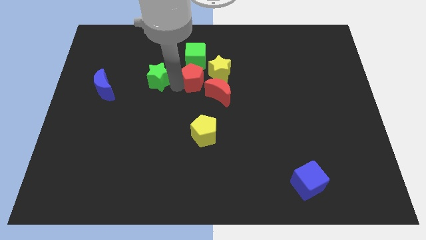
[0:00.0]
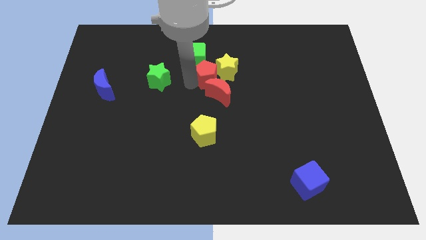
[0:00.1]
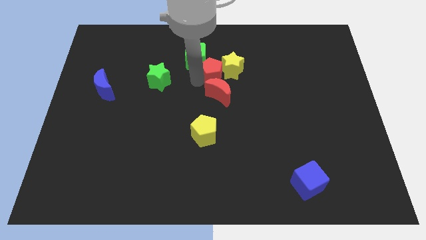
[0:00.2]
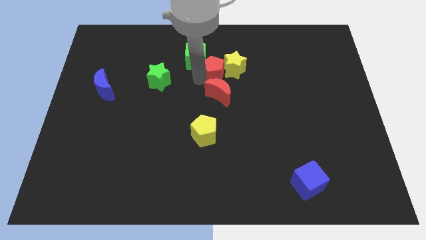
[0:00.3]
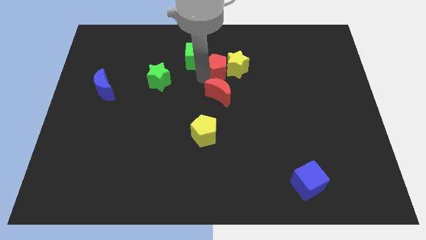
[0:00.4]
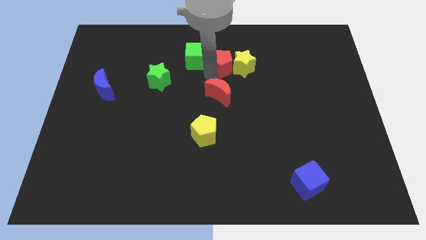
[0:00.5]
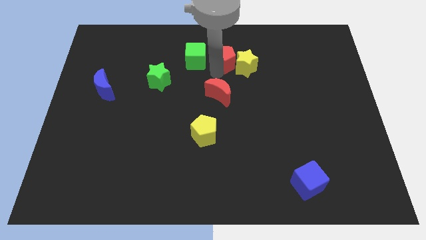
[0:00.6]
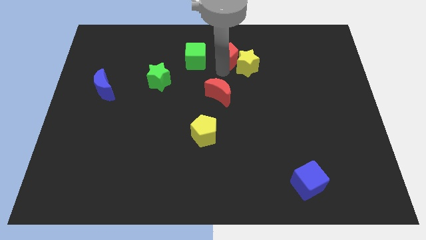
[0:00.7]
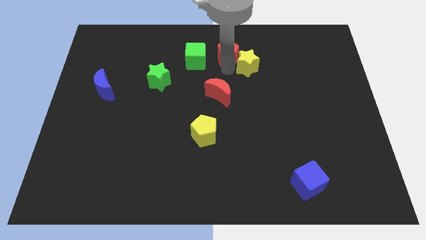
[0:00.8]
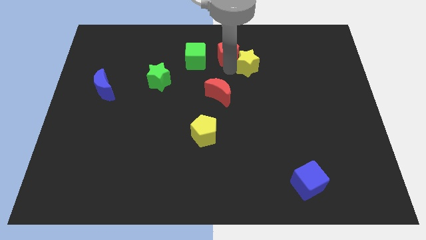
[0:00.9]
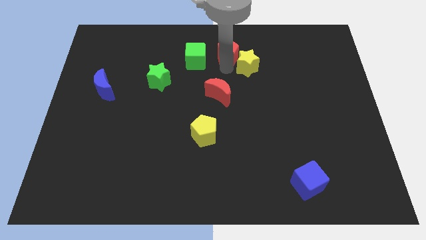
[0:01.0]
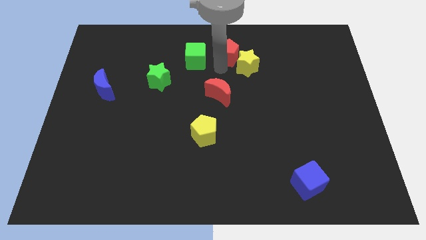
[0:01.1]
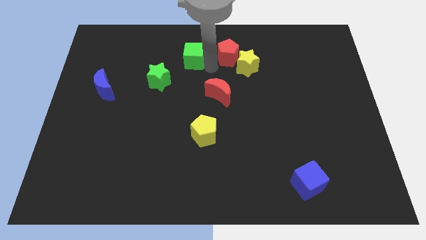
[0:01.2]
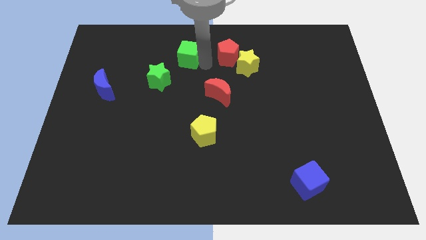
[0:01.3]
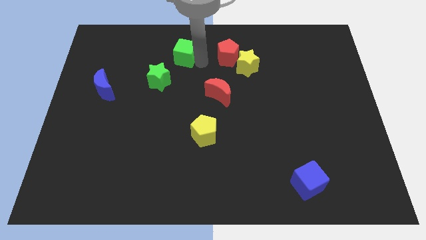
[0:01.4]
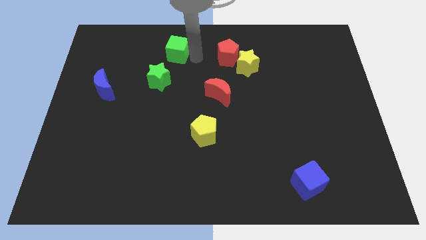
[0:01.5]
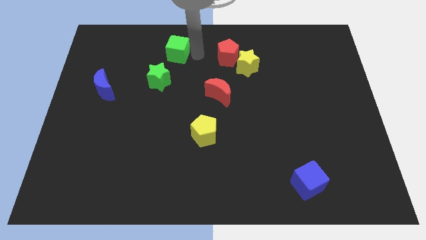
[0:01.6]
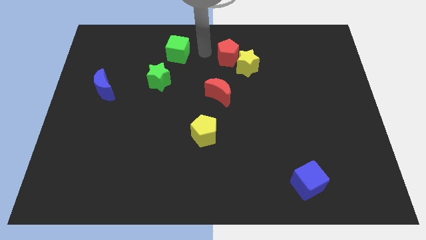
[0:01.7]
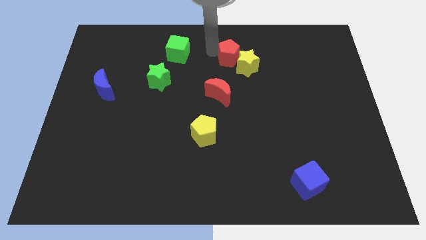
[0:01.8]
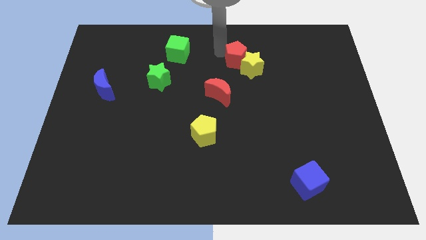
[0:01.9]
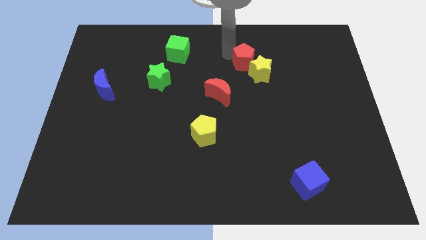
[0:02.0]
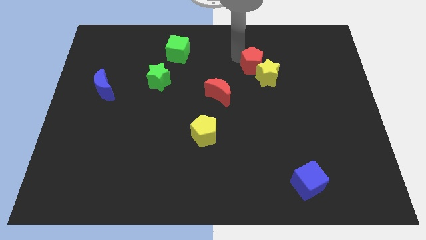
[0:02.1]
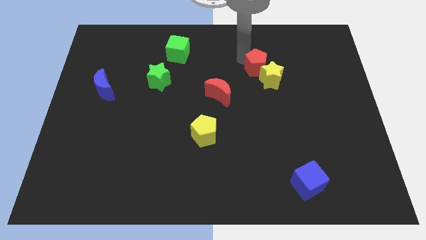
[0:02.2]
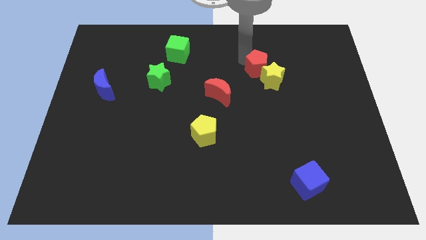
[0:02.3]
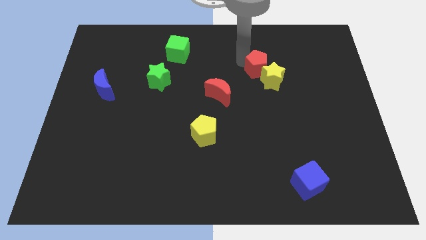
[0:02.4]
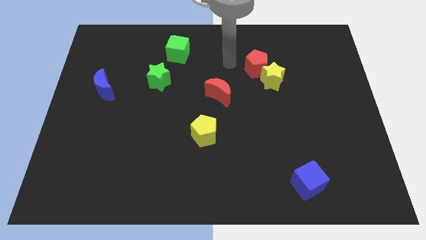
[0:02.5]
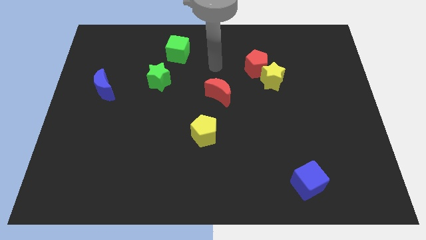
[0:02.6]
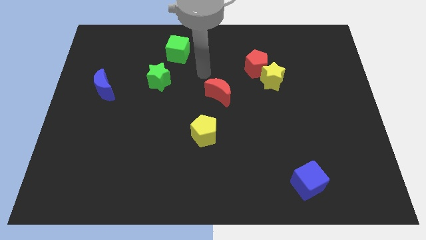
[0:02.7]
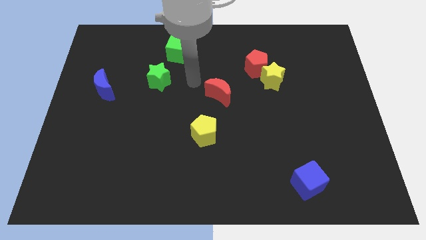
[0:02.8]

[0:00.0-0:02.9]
push the red pentagon and the yellow star towards the right

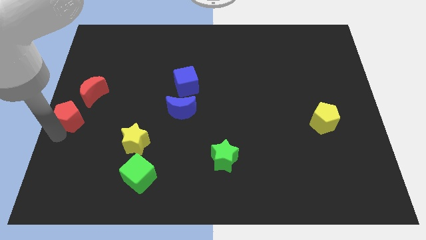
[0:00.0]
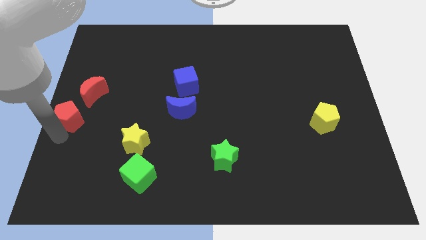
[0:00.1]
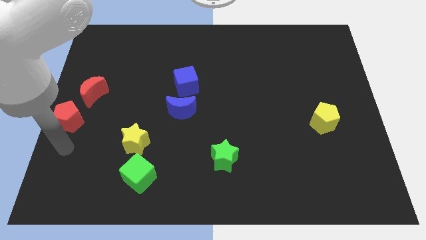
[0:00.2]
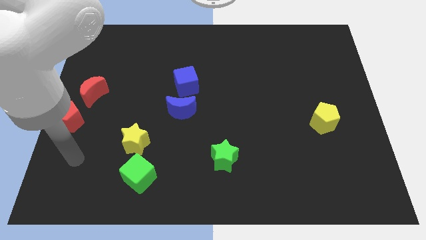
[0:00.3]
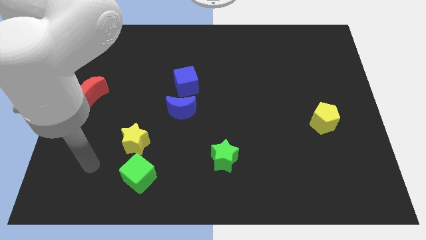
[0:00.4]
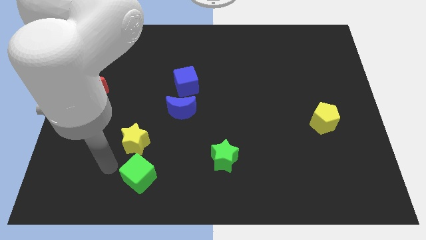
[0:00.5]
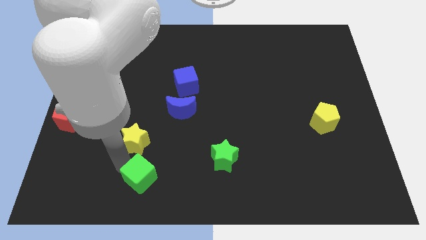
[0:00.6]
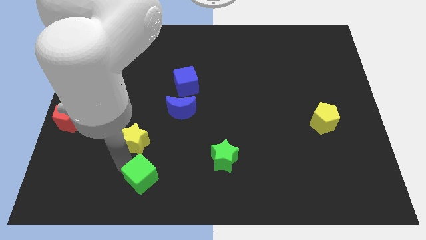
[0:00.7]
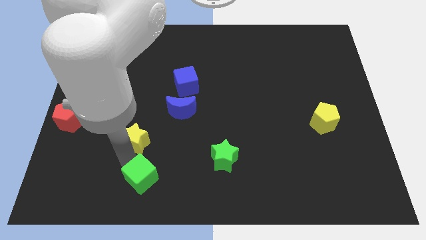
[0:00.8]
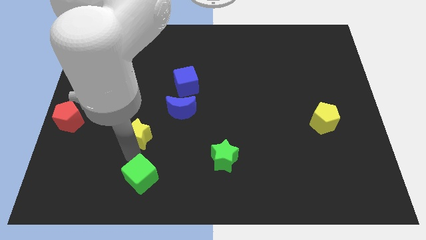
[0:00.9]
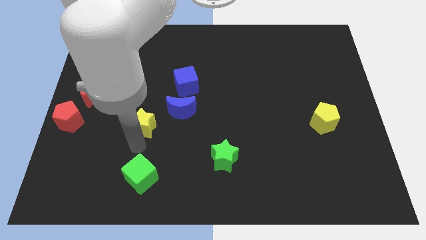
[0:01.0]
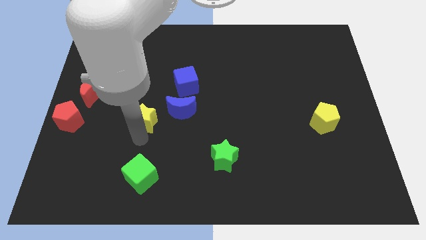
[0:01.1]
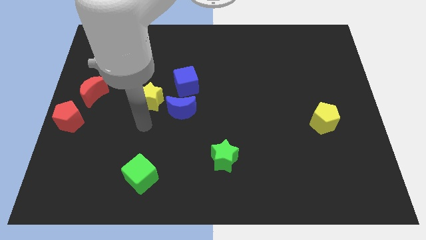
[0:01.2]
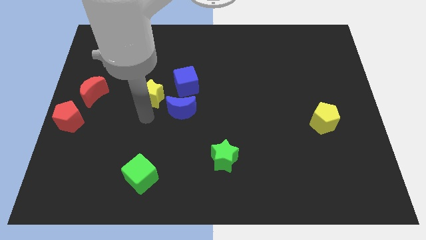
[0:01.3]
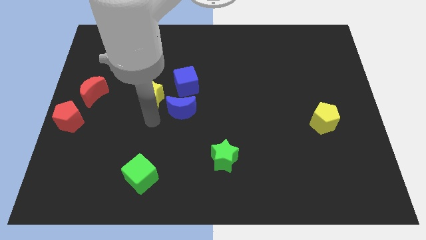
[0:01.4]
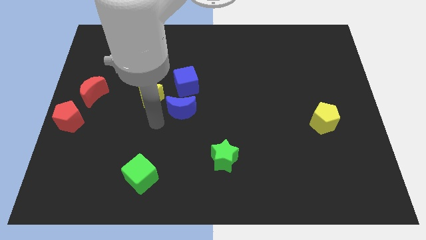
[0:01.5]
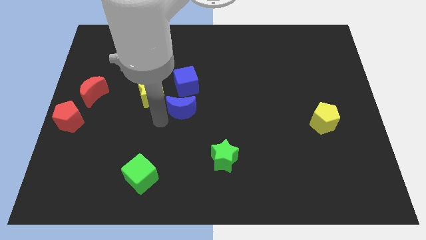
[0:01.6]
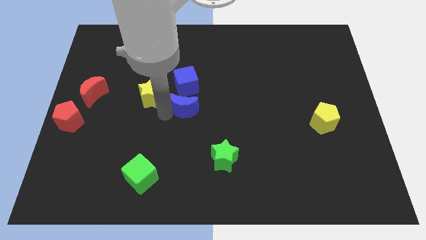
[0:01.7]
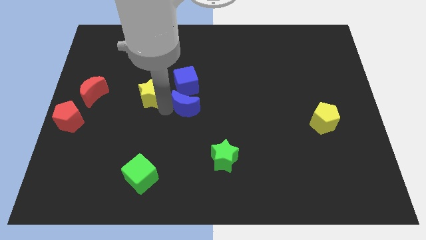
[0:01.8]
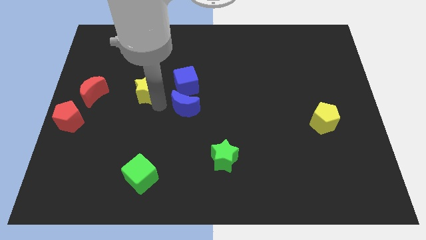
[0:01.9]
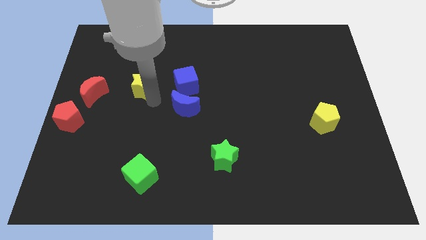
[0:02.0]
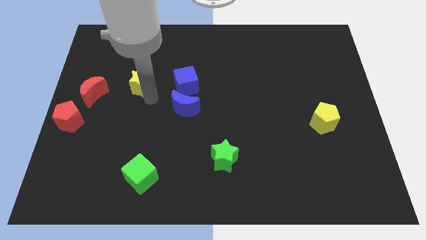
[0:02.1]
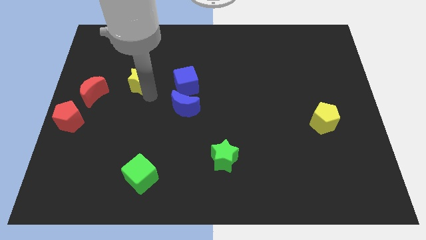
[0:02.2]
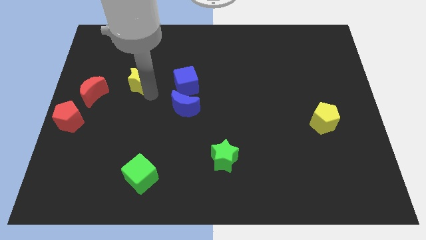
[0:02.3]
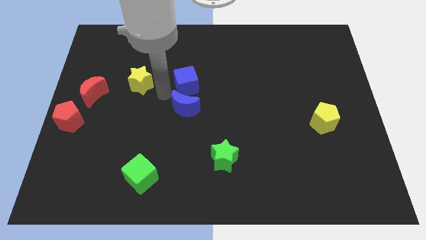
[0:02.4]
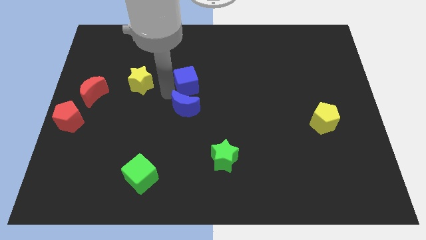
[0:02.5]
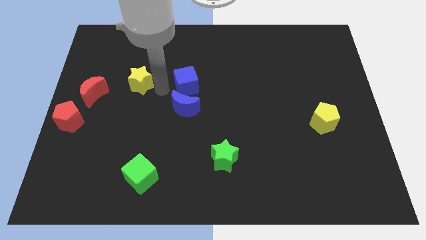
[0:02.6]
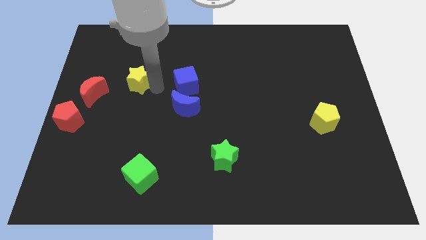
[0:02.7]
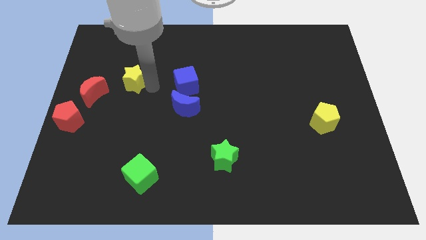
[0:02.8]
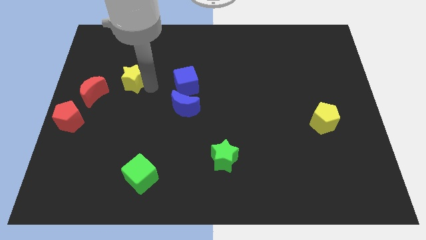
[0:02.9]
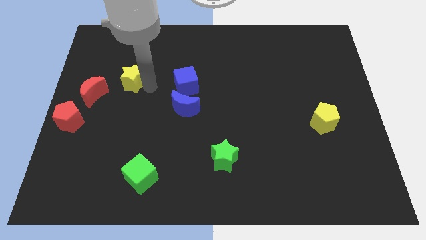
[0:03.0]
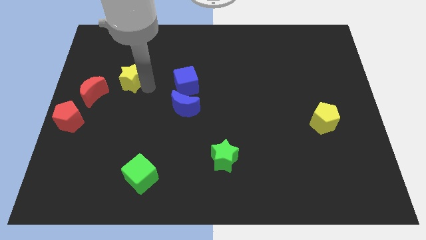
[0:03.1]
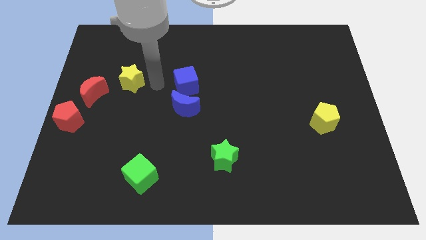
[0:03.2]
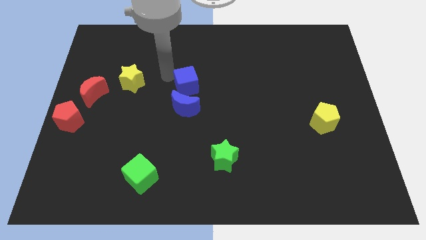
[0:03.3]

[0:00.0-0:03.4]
push yellow star towards up

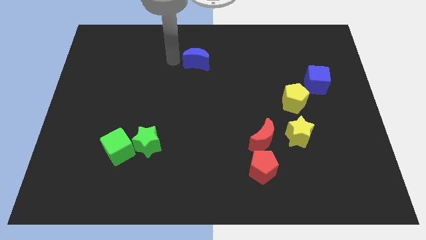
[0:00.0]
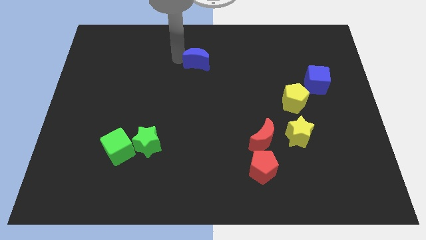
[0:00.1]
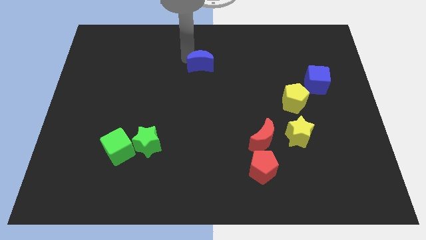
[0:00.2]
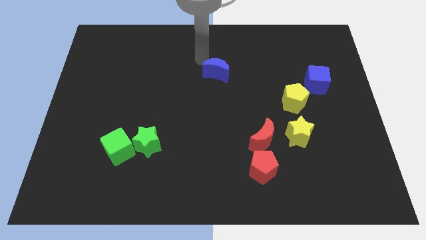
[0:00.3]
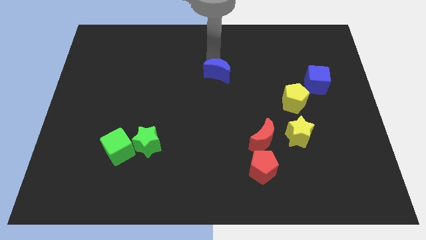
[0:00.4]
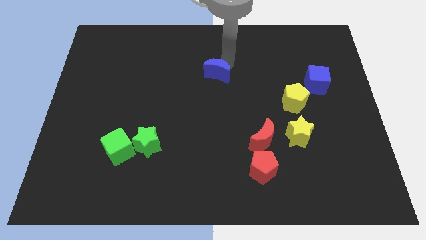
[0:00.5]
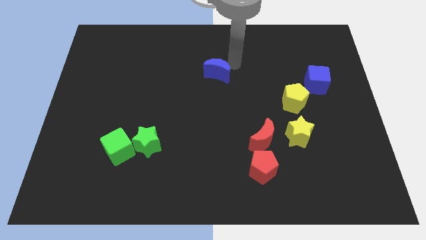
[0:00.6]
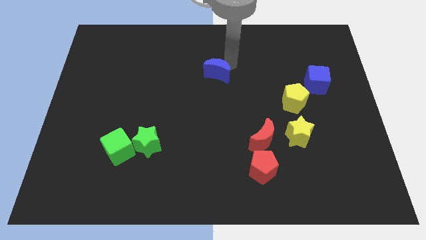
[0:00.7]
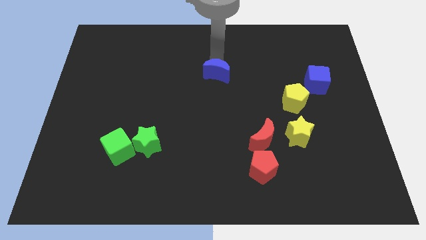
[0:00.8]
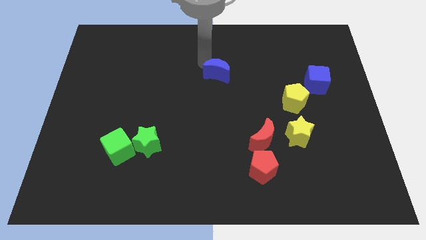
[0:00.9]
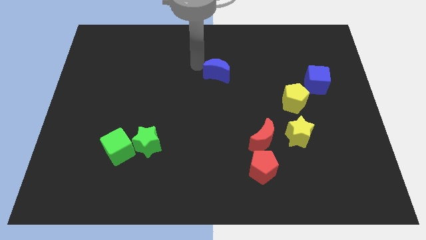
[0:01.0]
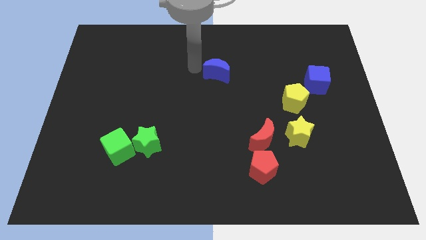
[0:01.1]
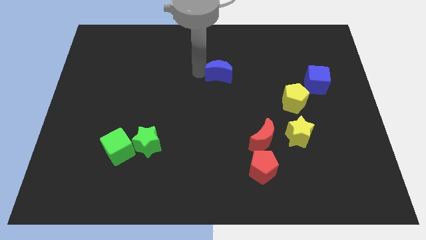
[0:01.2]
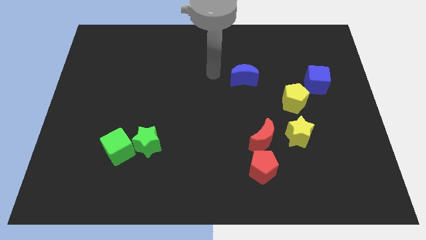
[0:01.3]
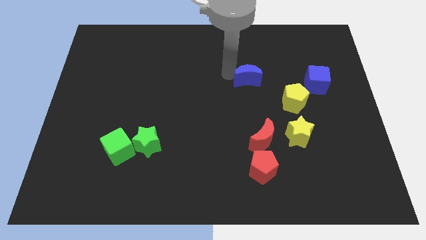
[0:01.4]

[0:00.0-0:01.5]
move the blue crescent towards blue square

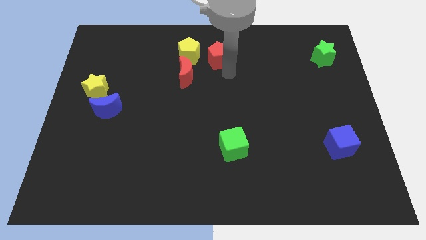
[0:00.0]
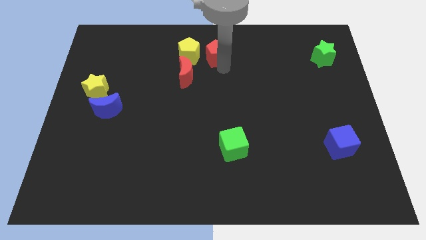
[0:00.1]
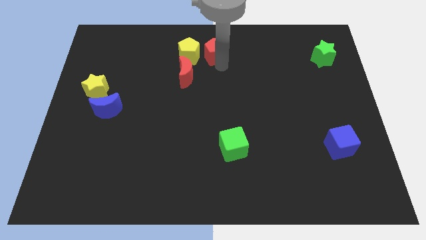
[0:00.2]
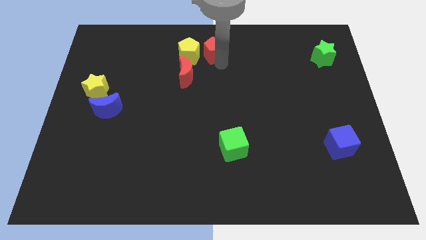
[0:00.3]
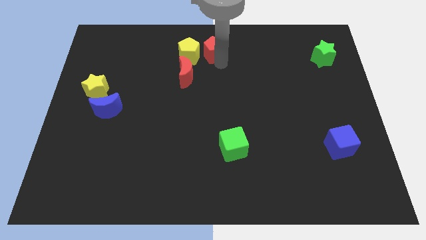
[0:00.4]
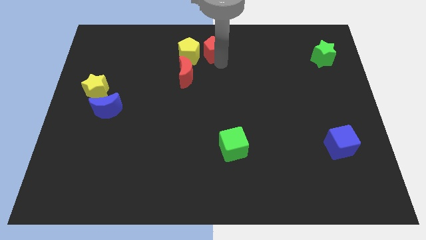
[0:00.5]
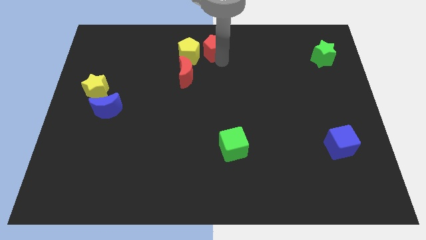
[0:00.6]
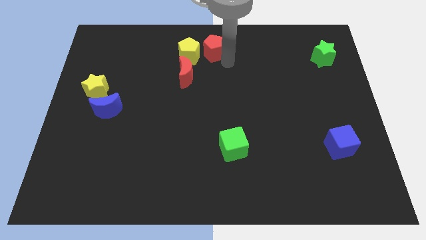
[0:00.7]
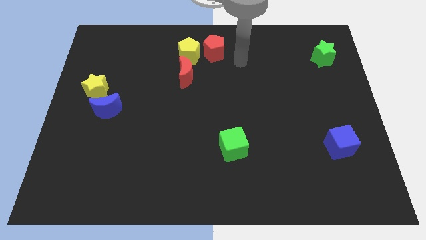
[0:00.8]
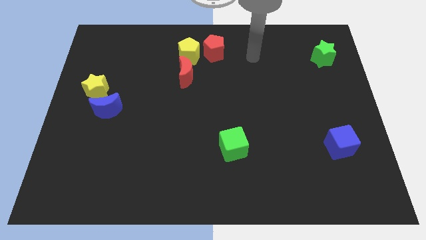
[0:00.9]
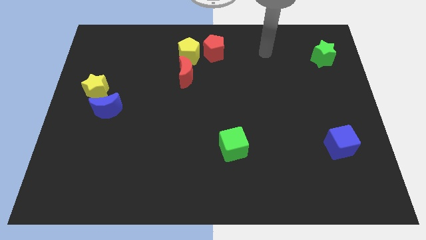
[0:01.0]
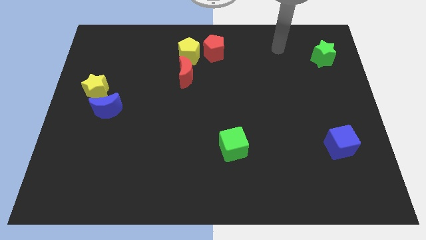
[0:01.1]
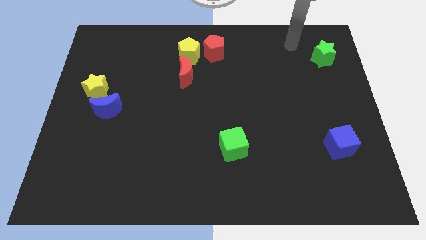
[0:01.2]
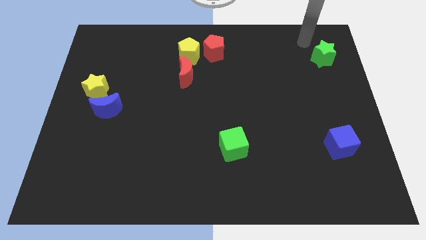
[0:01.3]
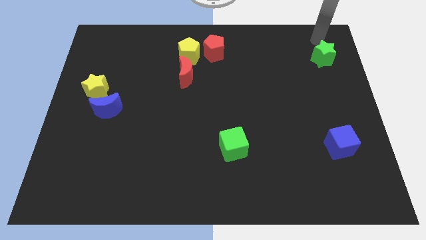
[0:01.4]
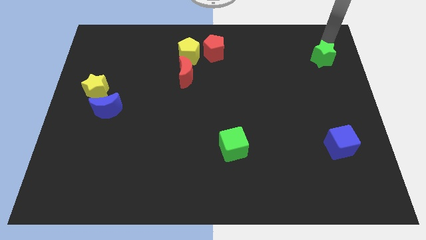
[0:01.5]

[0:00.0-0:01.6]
slide the red pentagon right to the yellow pentagon
